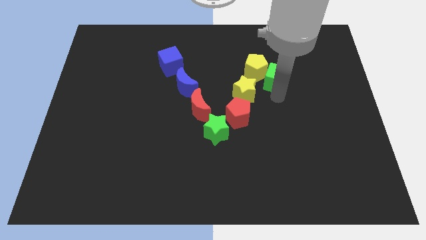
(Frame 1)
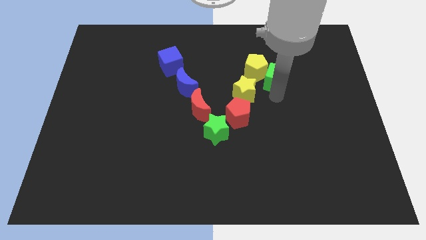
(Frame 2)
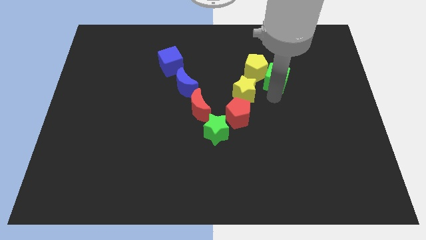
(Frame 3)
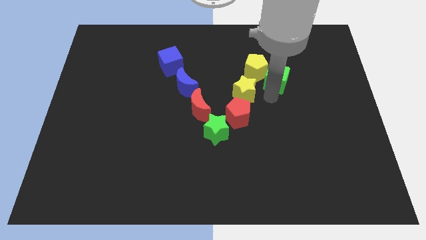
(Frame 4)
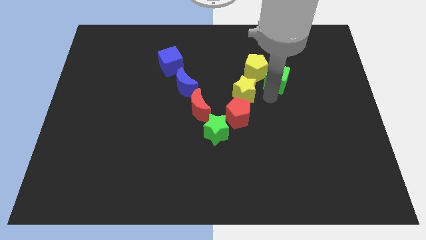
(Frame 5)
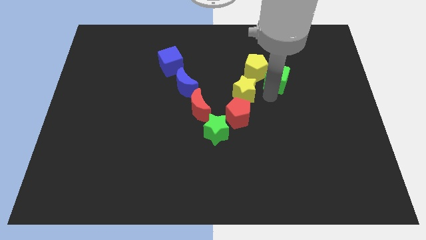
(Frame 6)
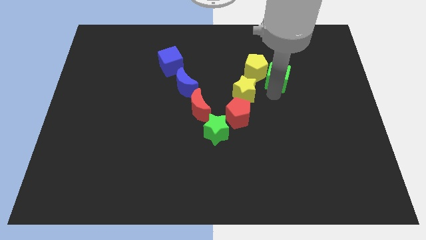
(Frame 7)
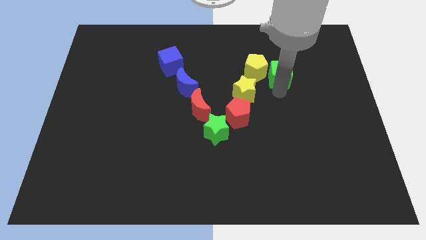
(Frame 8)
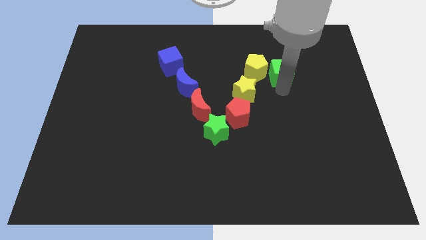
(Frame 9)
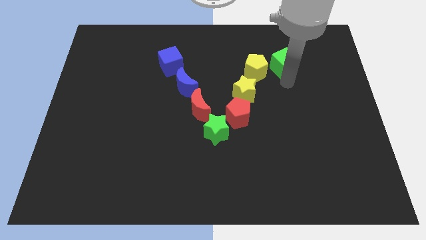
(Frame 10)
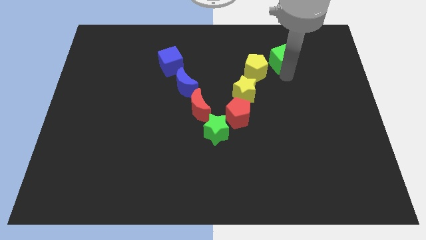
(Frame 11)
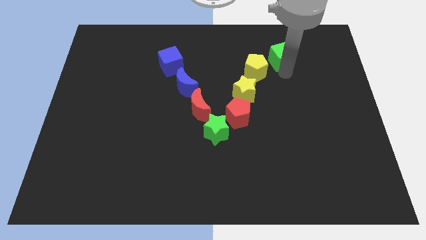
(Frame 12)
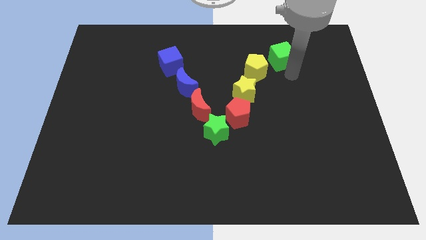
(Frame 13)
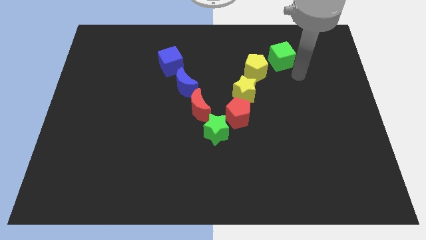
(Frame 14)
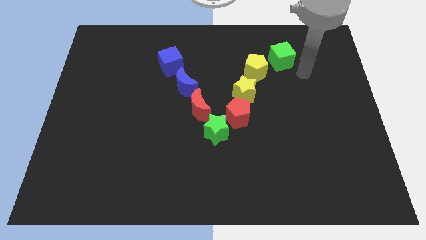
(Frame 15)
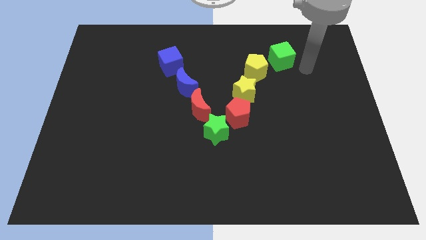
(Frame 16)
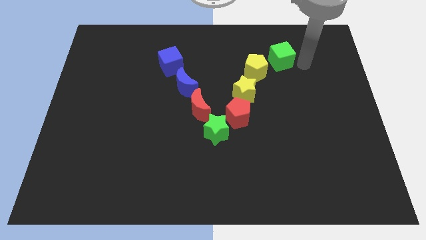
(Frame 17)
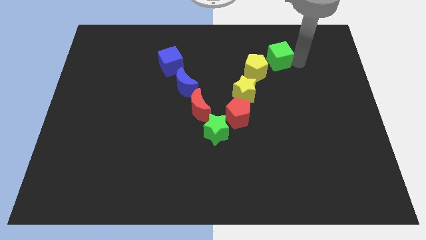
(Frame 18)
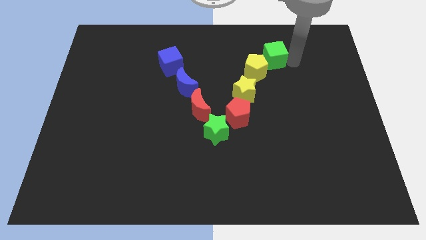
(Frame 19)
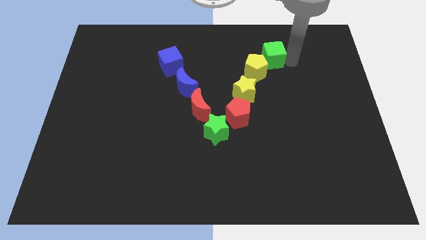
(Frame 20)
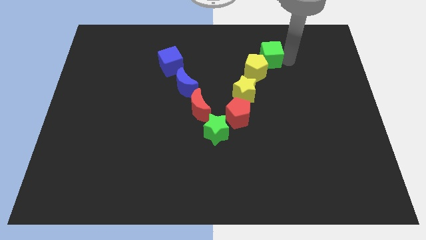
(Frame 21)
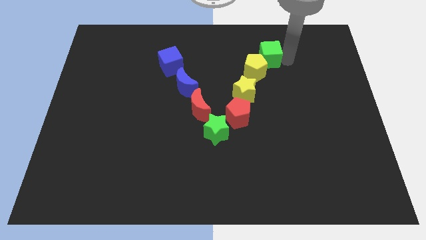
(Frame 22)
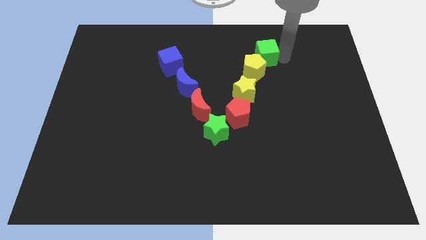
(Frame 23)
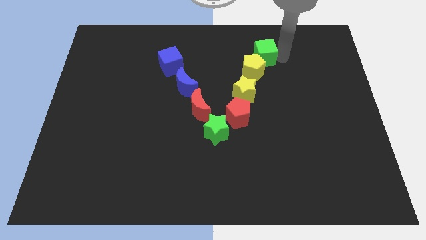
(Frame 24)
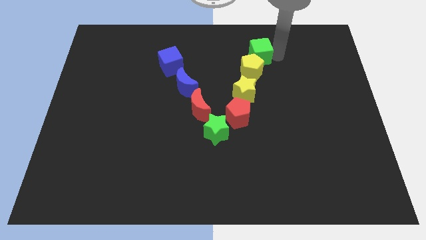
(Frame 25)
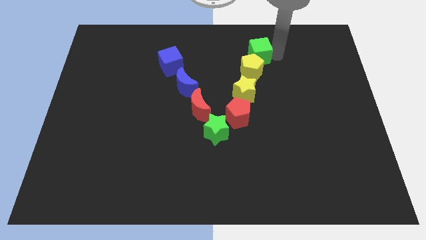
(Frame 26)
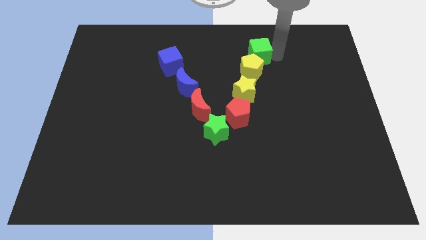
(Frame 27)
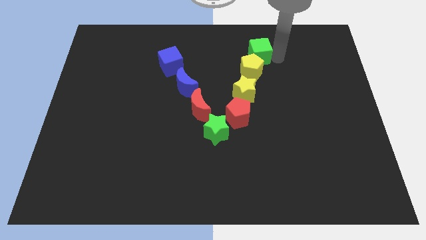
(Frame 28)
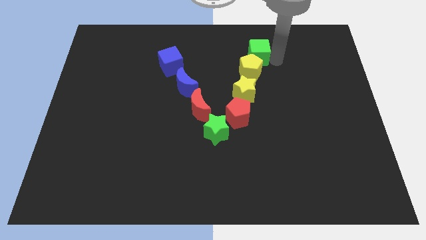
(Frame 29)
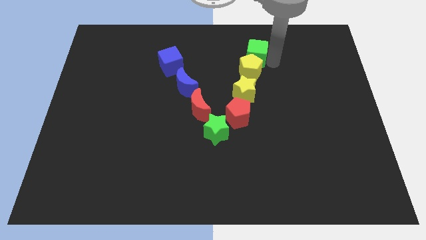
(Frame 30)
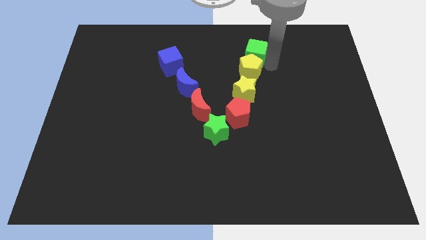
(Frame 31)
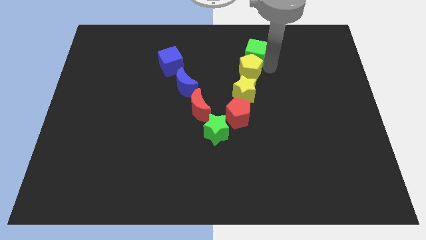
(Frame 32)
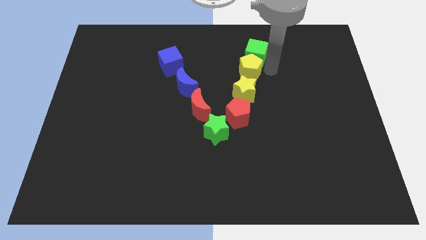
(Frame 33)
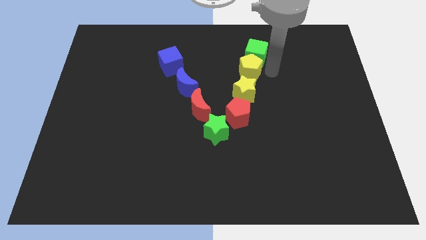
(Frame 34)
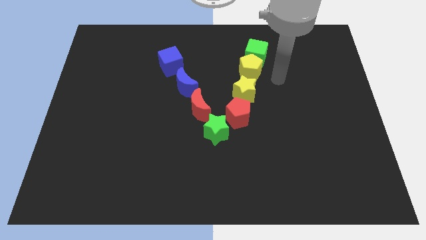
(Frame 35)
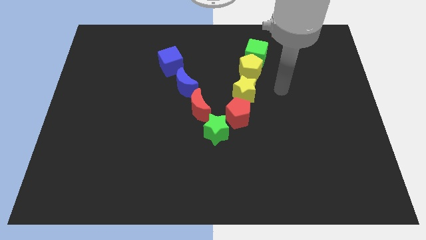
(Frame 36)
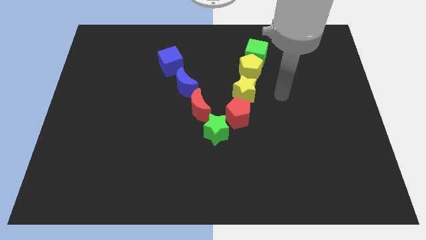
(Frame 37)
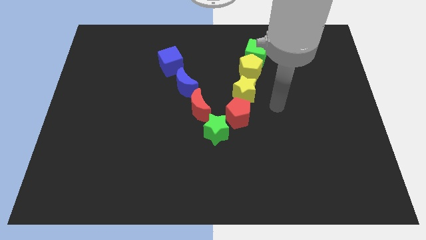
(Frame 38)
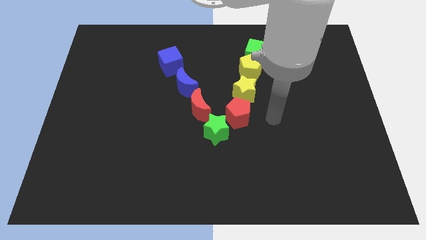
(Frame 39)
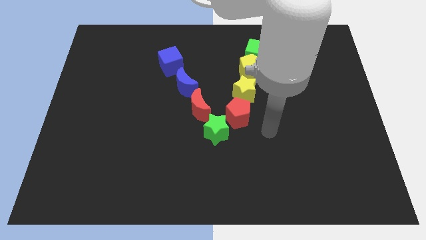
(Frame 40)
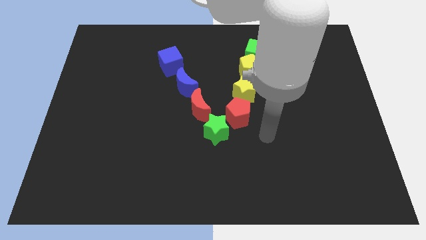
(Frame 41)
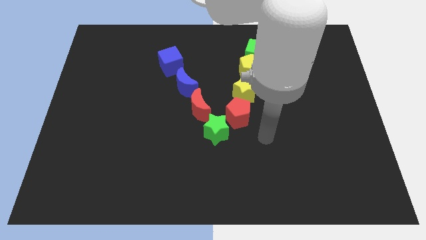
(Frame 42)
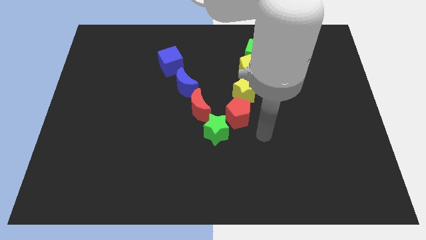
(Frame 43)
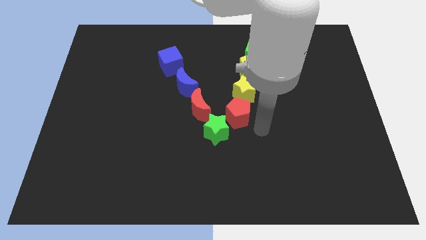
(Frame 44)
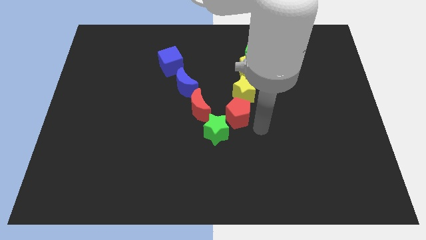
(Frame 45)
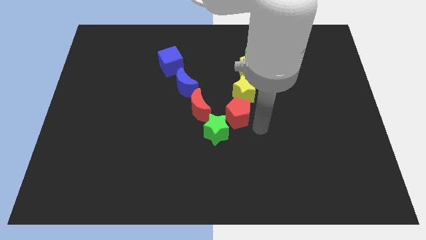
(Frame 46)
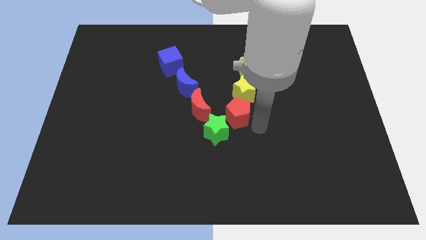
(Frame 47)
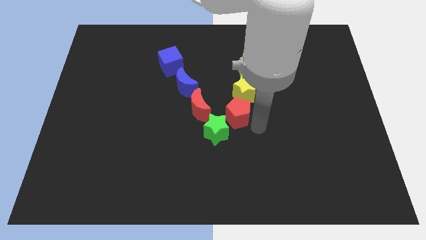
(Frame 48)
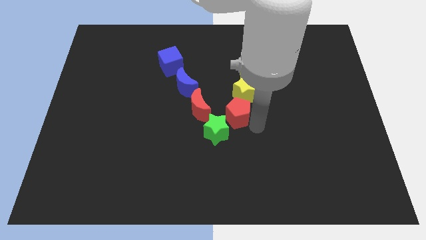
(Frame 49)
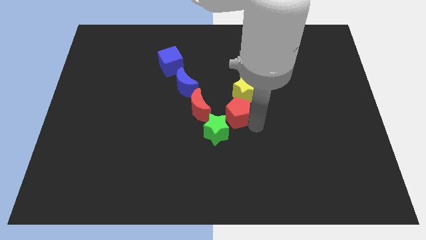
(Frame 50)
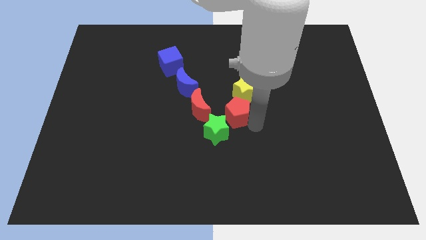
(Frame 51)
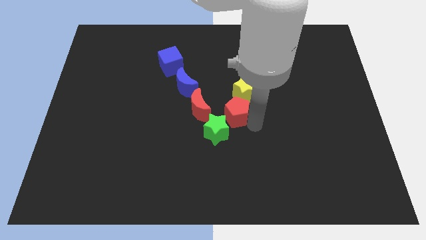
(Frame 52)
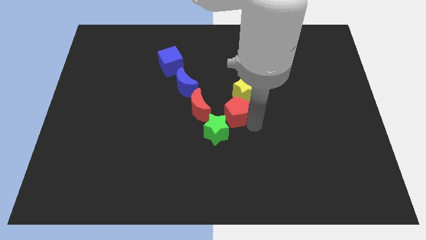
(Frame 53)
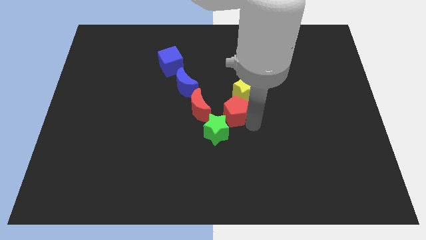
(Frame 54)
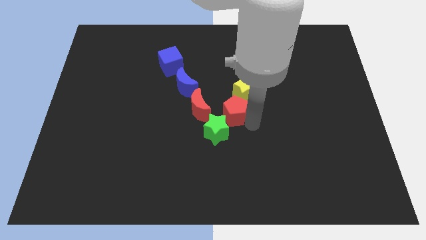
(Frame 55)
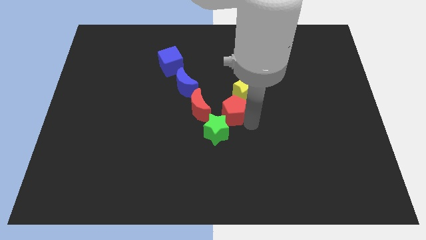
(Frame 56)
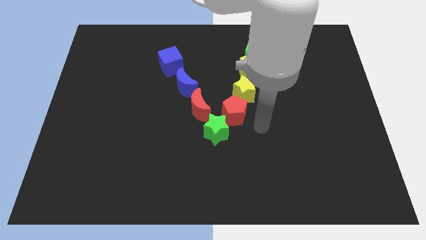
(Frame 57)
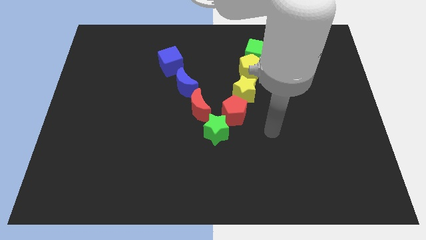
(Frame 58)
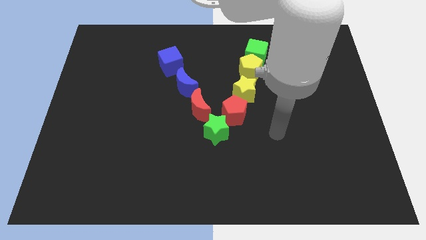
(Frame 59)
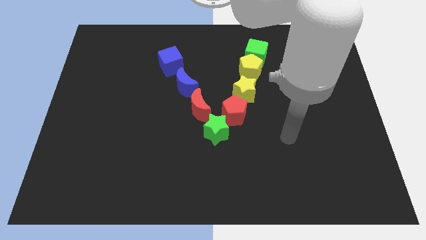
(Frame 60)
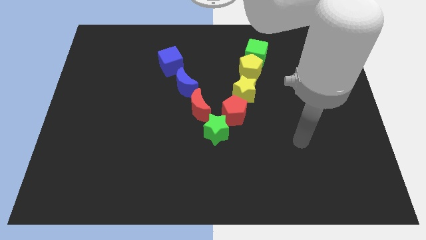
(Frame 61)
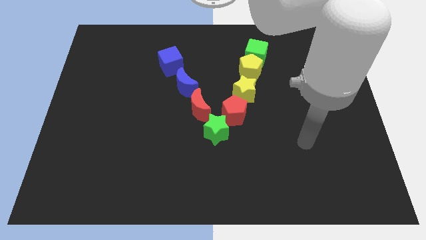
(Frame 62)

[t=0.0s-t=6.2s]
place the green cube to the top of the yellow pentagon

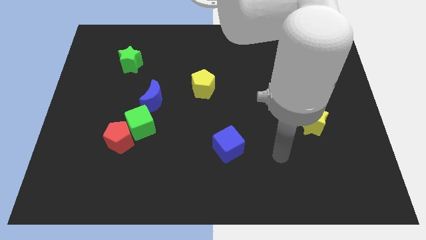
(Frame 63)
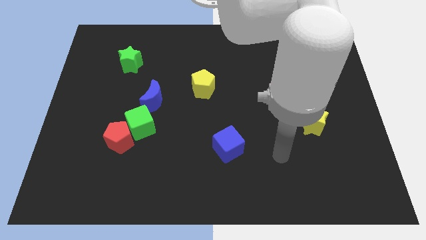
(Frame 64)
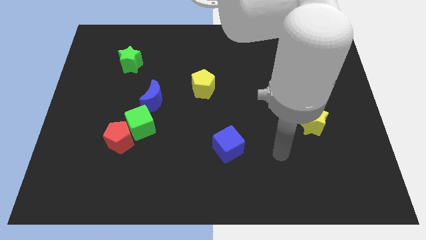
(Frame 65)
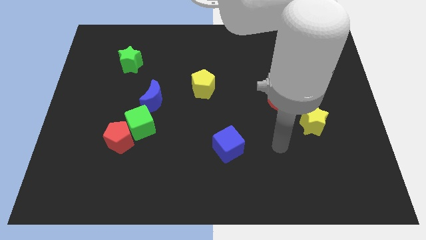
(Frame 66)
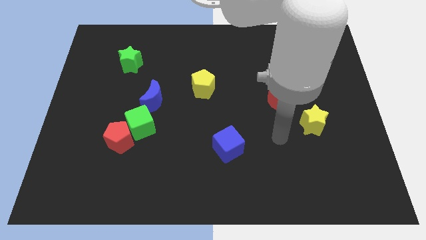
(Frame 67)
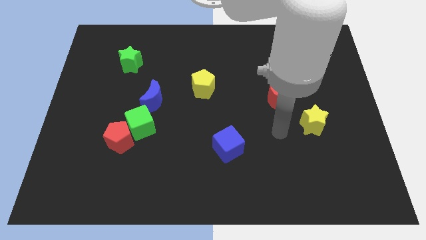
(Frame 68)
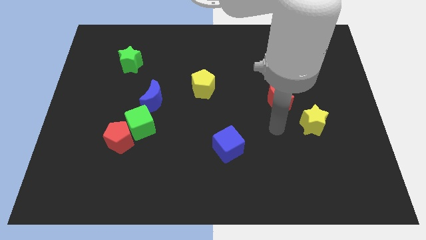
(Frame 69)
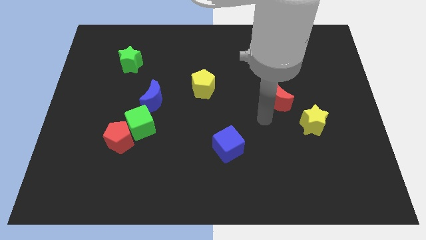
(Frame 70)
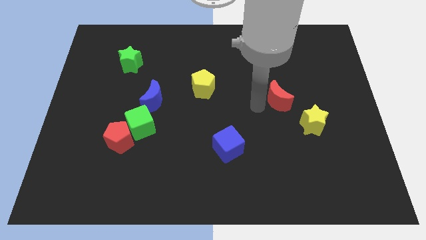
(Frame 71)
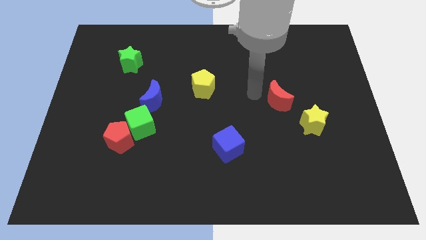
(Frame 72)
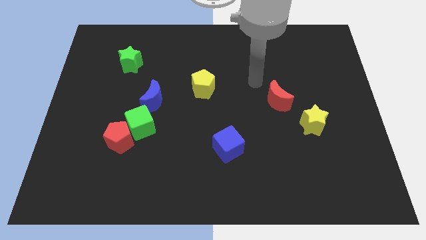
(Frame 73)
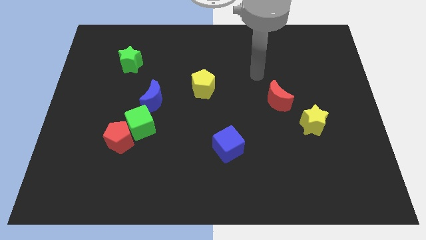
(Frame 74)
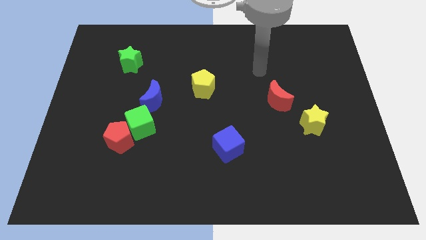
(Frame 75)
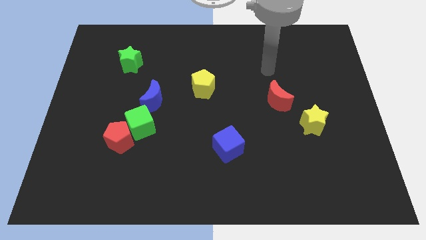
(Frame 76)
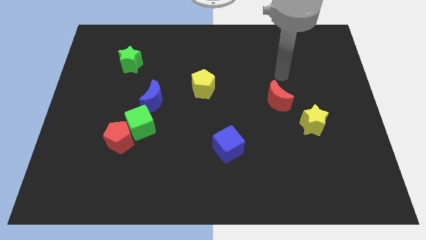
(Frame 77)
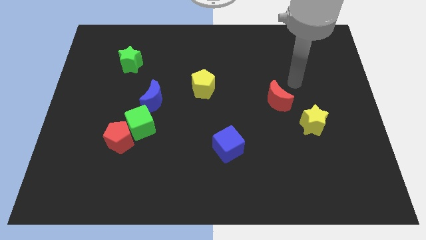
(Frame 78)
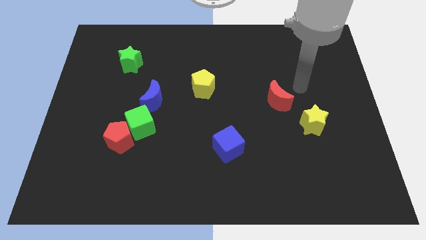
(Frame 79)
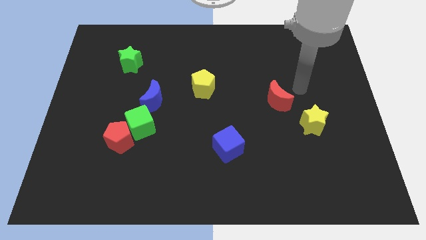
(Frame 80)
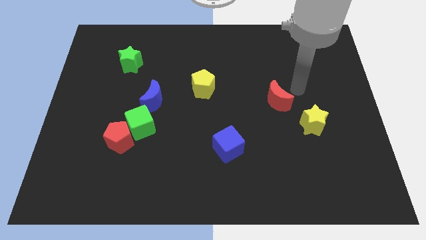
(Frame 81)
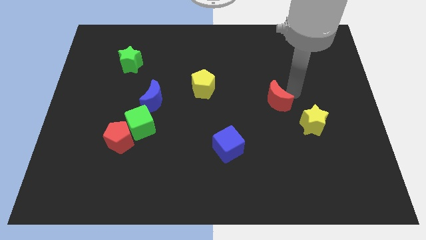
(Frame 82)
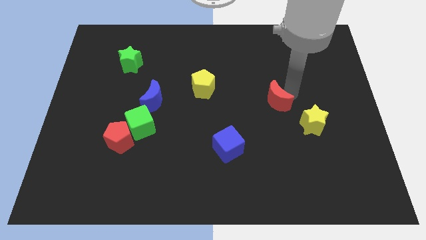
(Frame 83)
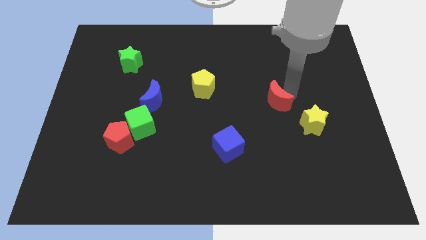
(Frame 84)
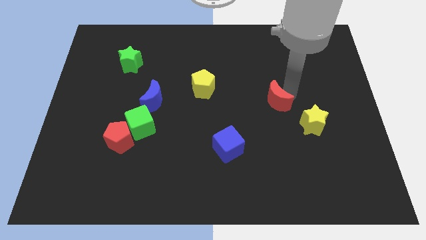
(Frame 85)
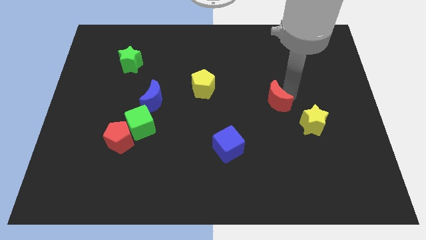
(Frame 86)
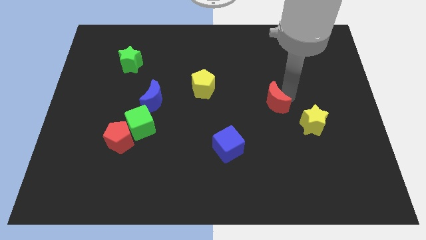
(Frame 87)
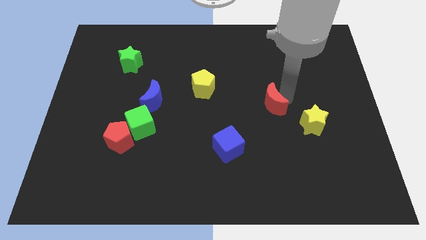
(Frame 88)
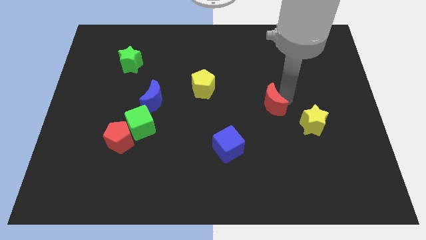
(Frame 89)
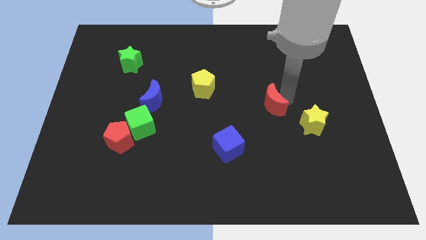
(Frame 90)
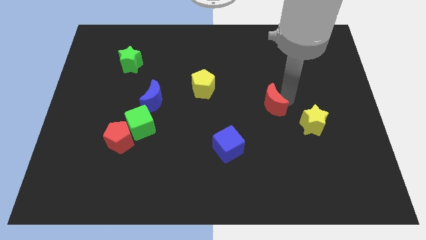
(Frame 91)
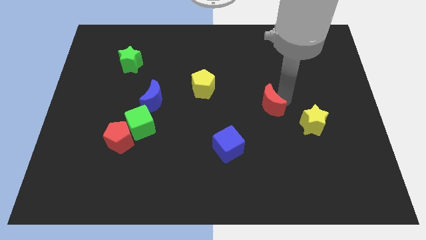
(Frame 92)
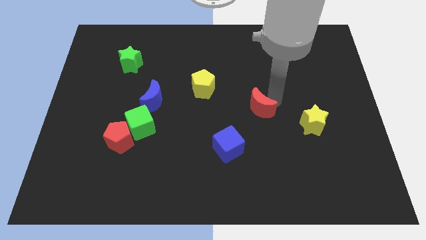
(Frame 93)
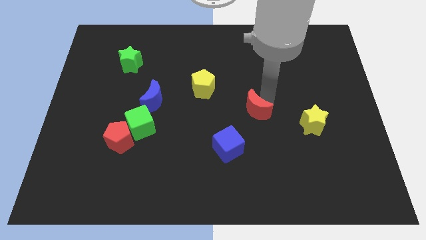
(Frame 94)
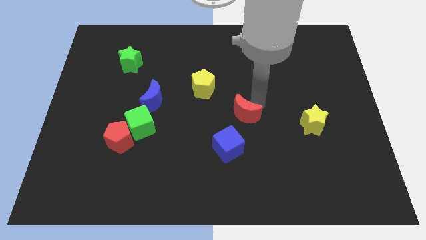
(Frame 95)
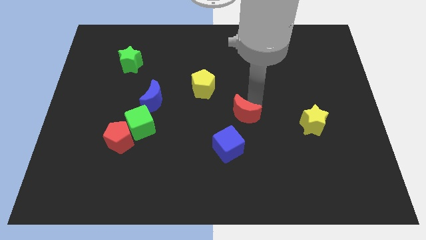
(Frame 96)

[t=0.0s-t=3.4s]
push the red moon towards the top side of the blue cube
